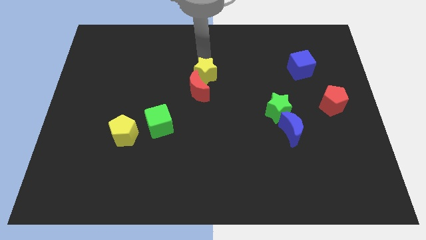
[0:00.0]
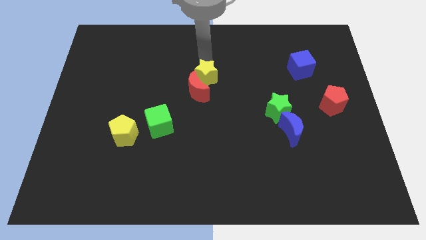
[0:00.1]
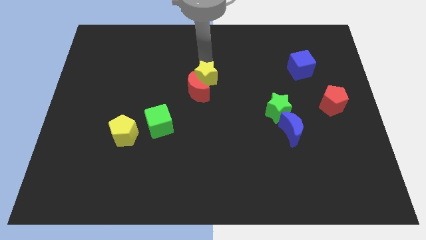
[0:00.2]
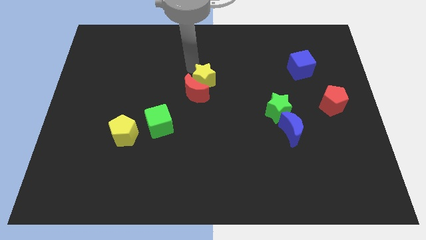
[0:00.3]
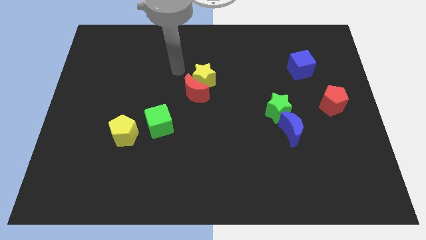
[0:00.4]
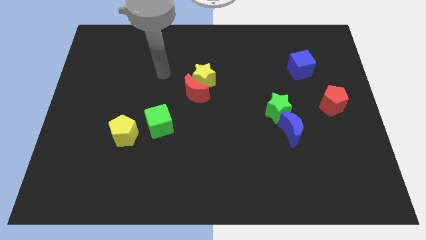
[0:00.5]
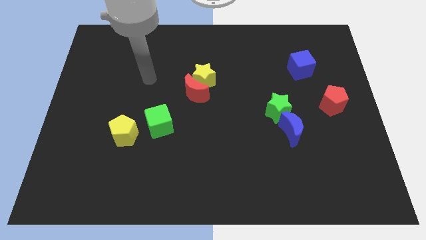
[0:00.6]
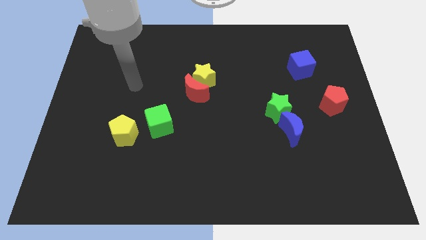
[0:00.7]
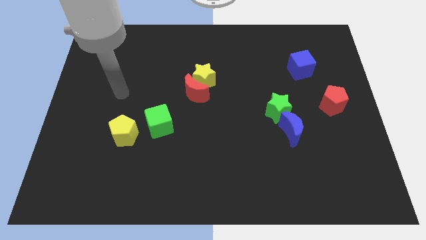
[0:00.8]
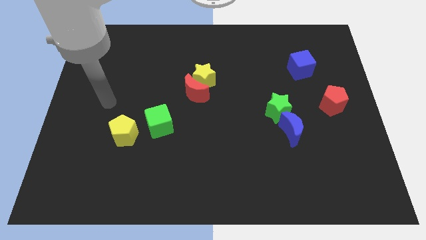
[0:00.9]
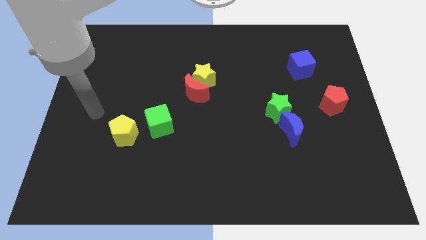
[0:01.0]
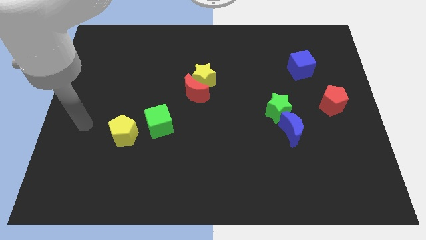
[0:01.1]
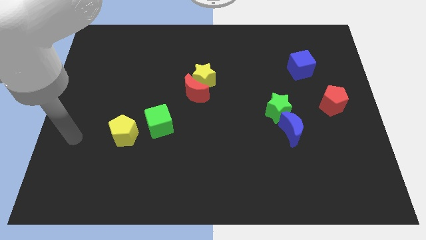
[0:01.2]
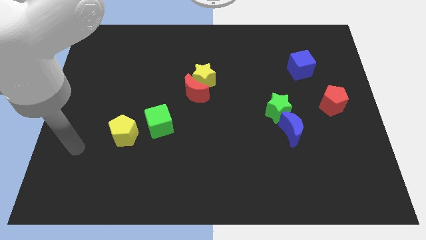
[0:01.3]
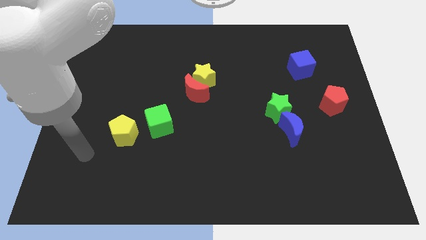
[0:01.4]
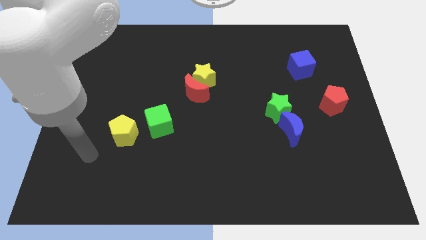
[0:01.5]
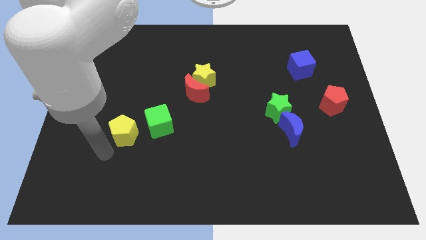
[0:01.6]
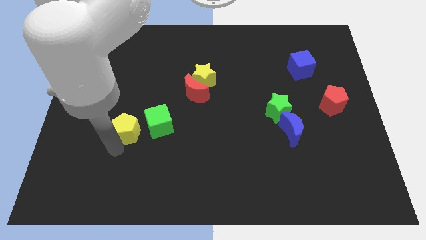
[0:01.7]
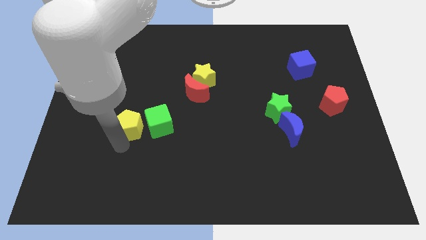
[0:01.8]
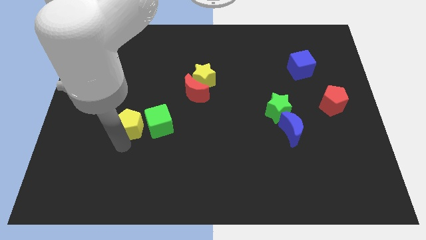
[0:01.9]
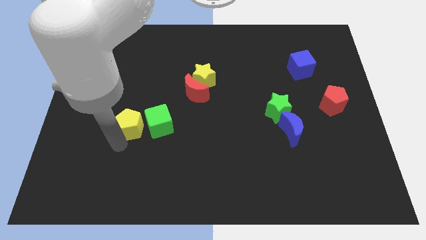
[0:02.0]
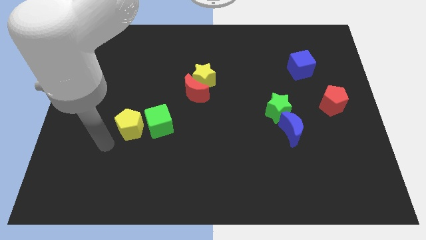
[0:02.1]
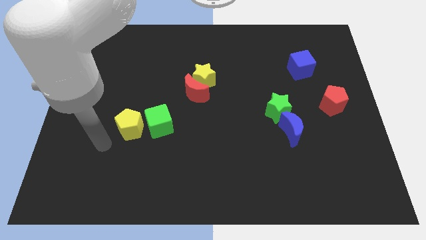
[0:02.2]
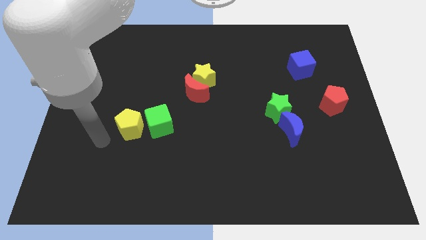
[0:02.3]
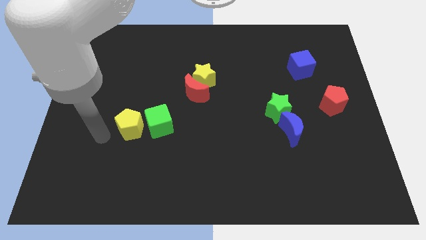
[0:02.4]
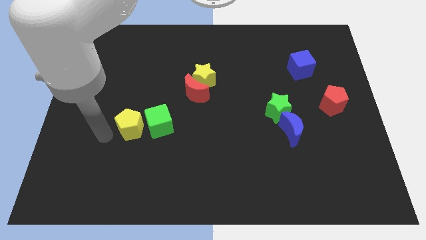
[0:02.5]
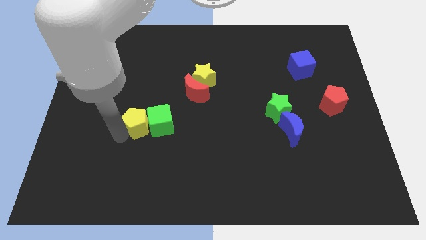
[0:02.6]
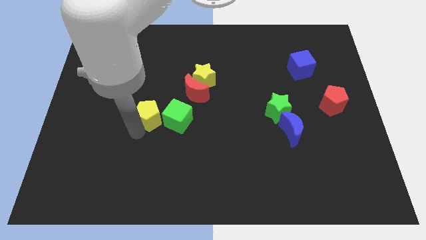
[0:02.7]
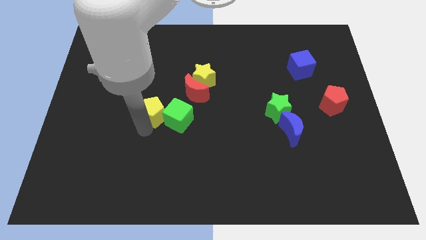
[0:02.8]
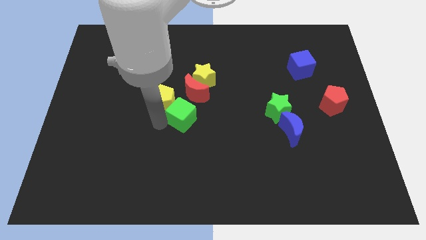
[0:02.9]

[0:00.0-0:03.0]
push yellow pentagon towards red crescent

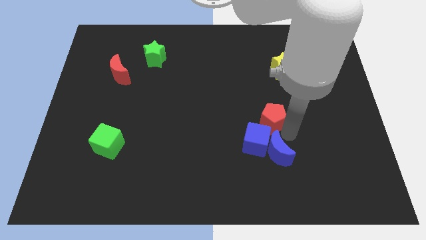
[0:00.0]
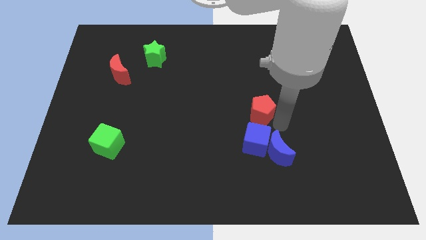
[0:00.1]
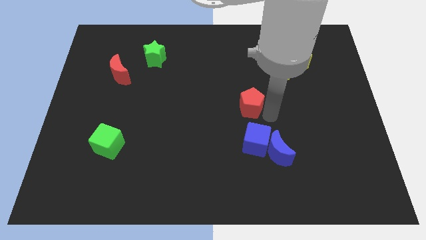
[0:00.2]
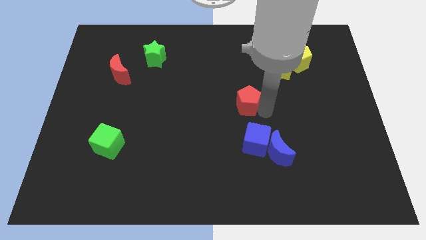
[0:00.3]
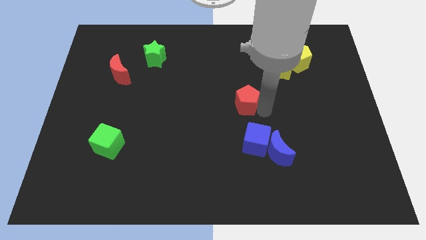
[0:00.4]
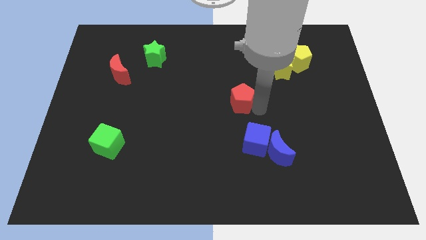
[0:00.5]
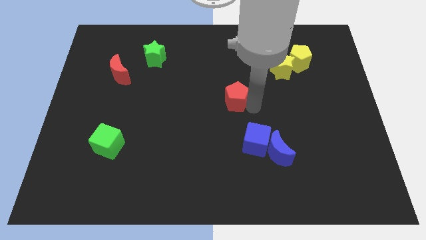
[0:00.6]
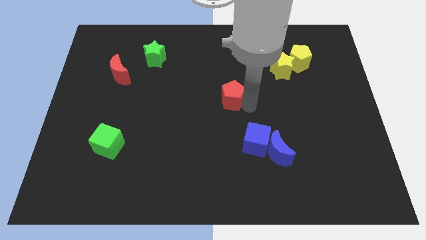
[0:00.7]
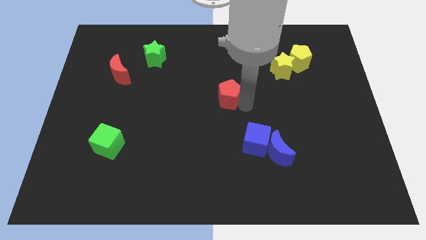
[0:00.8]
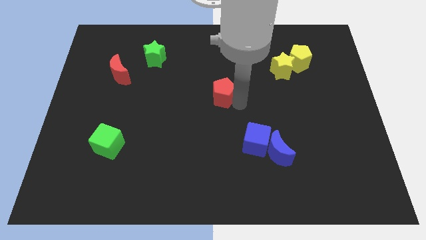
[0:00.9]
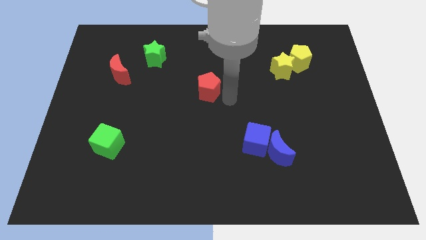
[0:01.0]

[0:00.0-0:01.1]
separate red pentagon from blue cubes

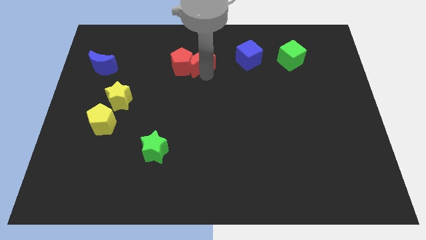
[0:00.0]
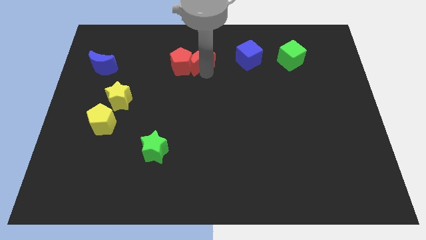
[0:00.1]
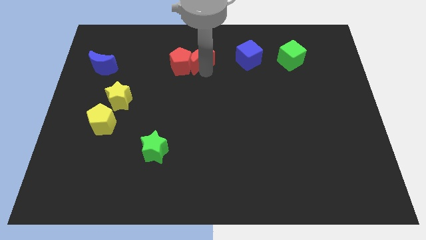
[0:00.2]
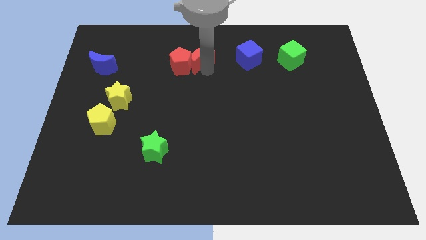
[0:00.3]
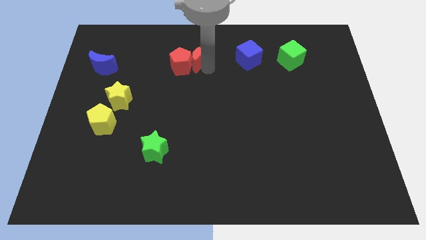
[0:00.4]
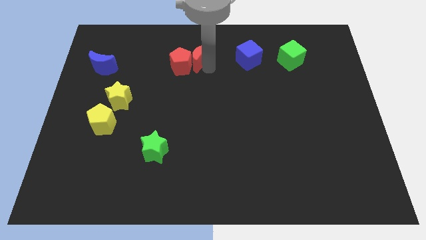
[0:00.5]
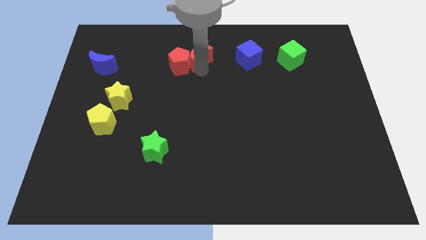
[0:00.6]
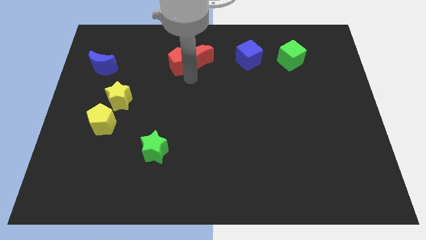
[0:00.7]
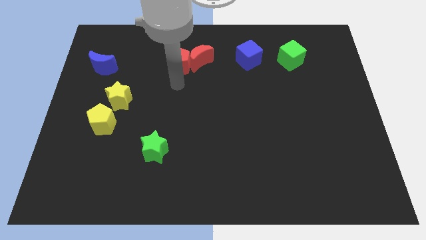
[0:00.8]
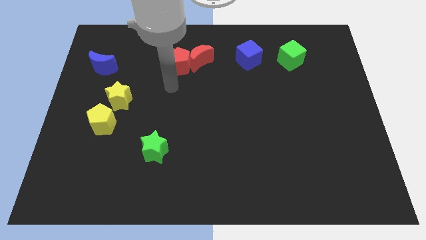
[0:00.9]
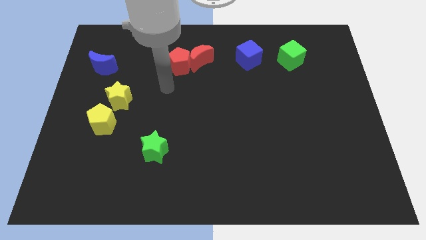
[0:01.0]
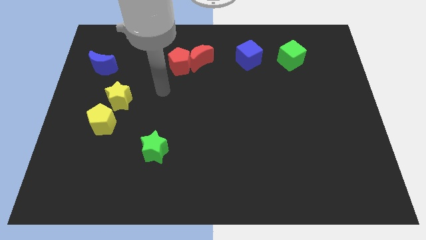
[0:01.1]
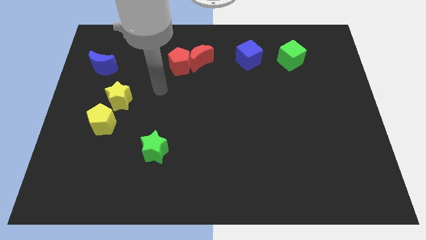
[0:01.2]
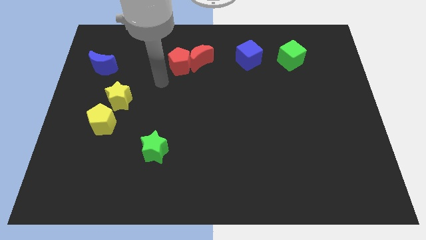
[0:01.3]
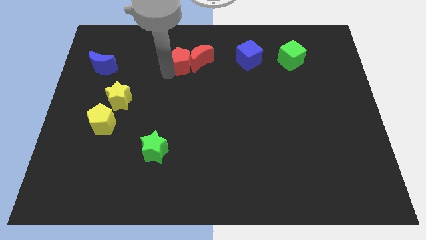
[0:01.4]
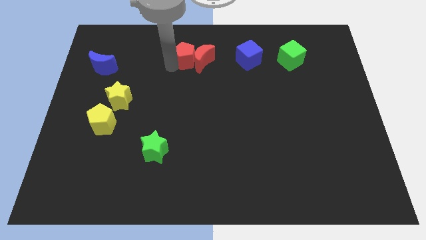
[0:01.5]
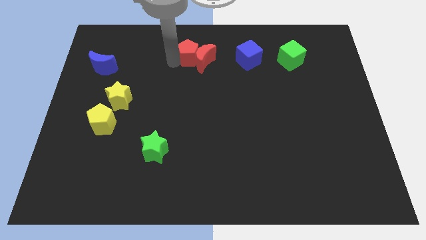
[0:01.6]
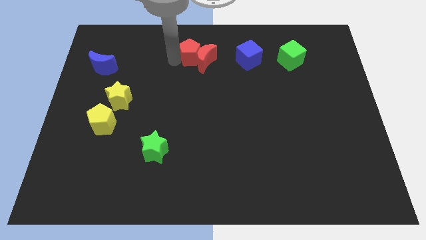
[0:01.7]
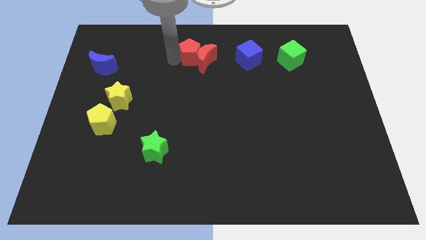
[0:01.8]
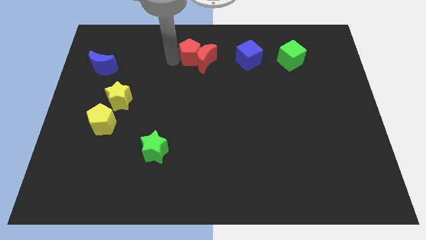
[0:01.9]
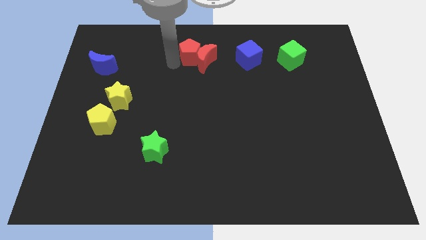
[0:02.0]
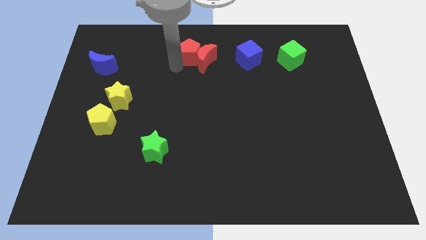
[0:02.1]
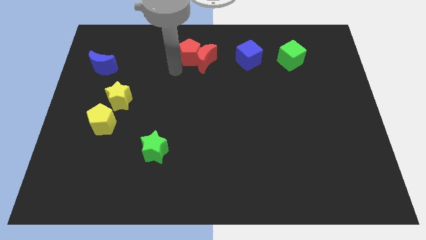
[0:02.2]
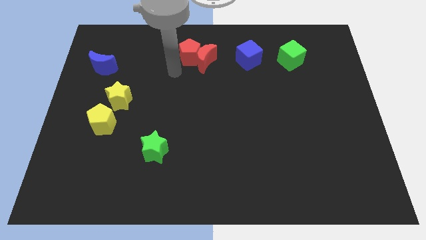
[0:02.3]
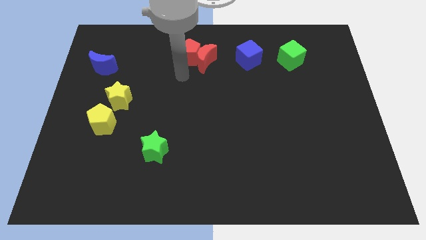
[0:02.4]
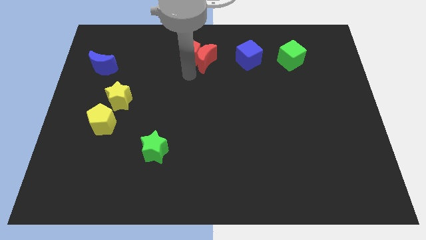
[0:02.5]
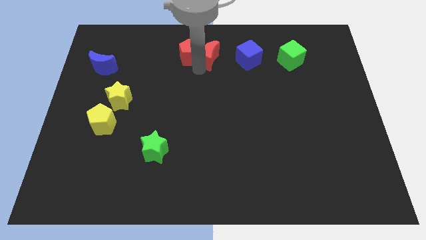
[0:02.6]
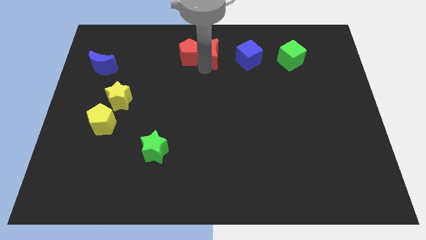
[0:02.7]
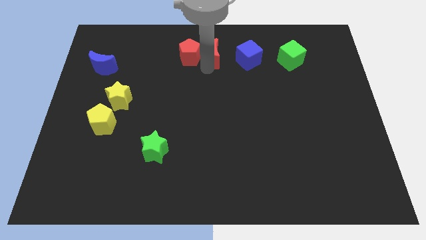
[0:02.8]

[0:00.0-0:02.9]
drag the red blocks towards center top

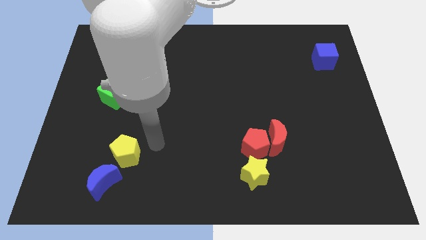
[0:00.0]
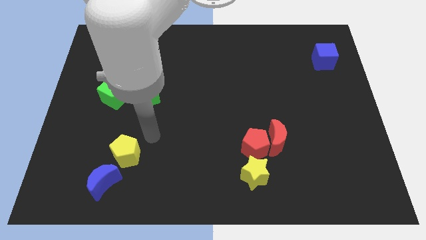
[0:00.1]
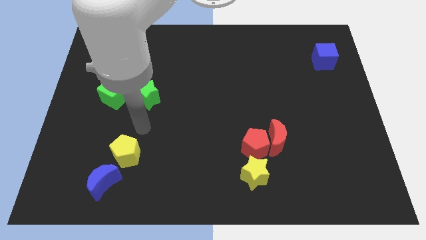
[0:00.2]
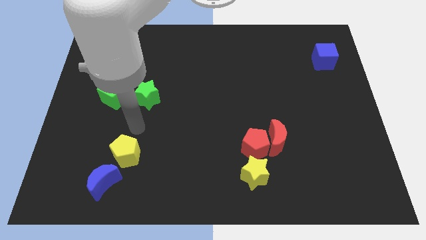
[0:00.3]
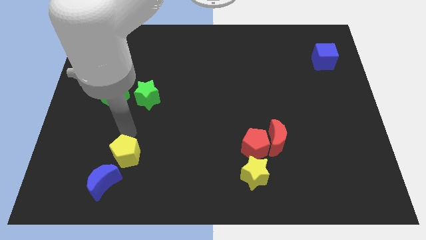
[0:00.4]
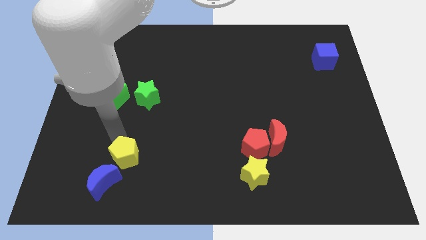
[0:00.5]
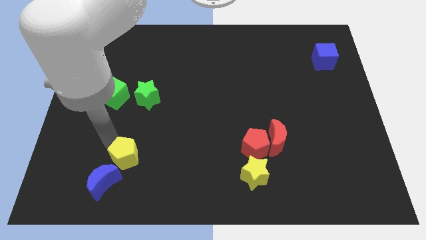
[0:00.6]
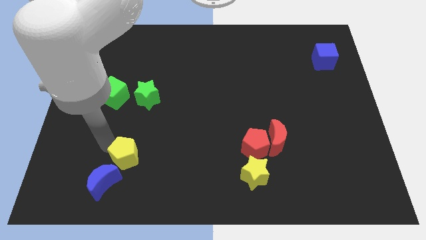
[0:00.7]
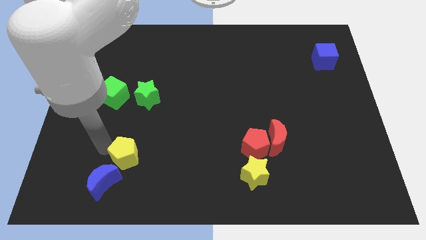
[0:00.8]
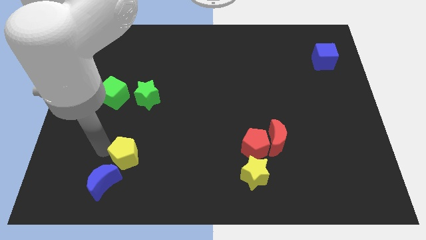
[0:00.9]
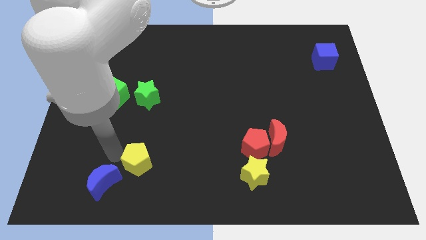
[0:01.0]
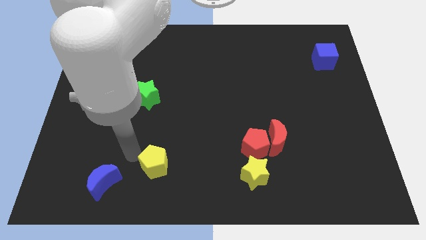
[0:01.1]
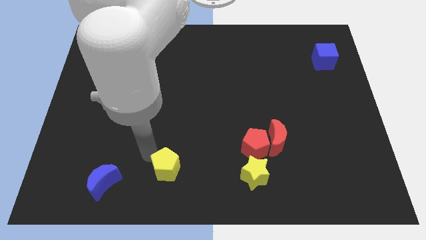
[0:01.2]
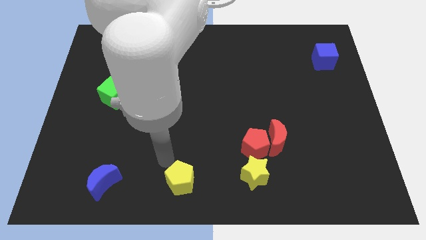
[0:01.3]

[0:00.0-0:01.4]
push the yellow pentagon between the blue moon and yellow star

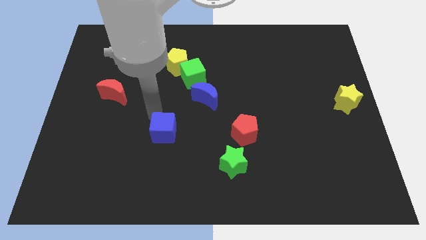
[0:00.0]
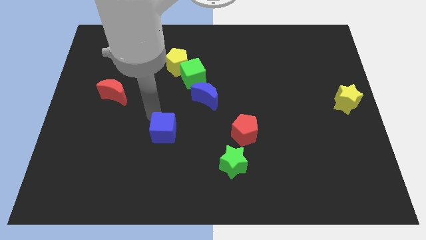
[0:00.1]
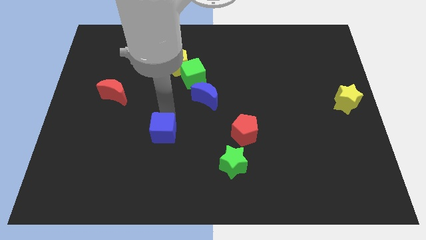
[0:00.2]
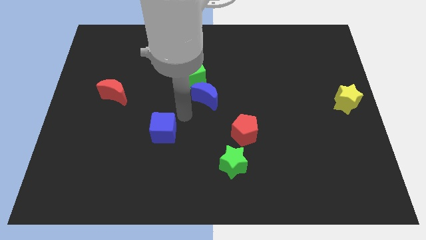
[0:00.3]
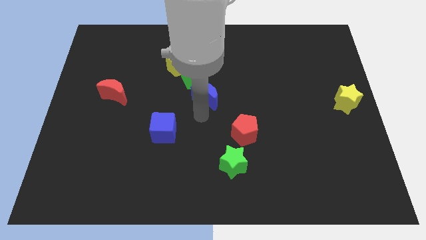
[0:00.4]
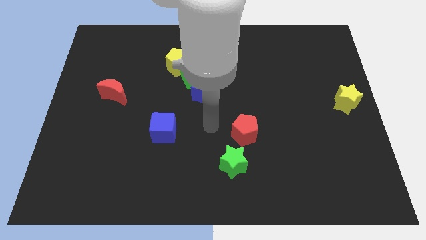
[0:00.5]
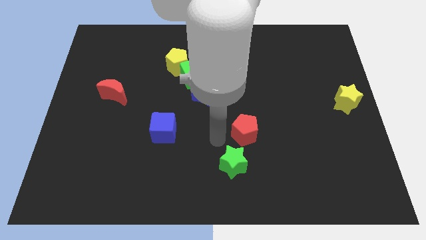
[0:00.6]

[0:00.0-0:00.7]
place your arm in between the blue cube and red pentagon
